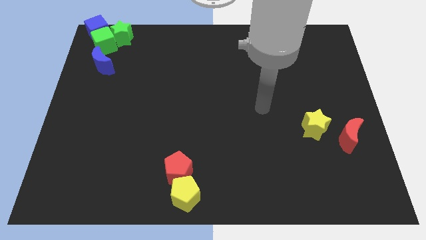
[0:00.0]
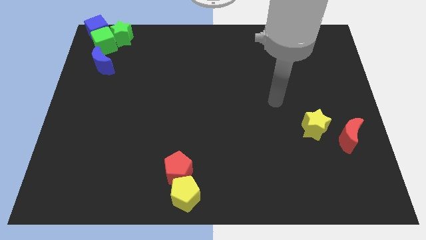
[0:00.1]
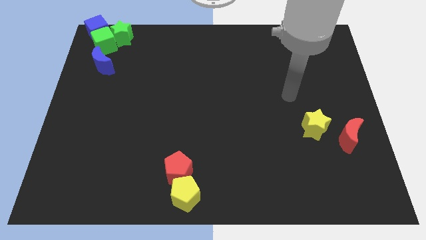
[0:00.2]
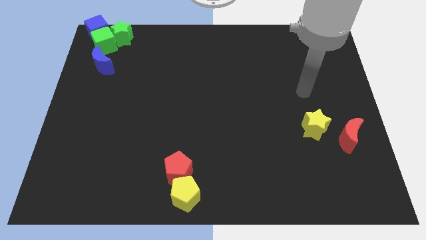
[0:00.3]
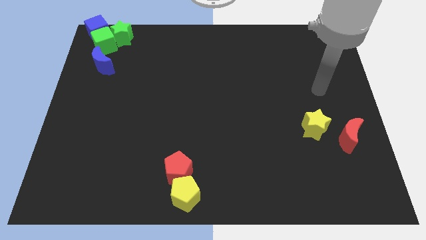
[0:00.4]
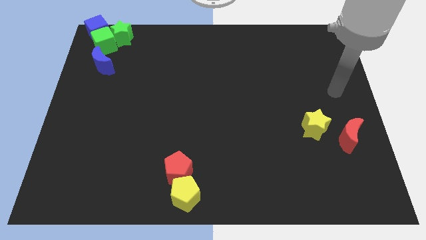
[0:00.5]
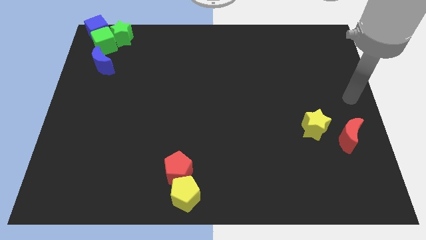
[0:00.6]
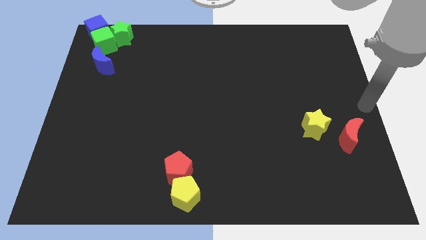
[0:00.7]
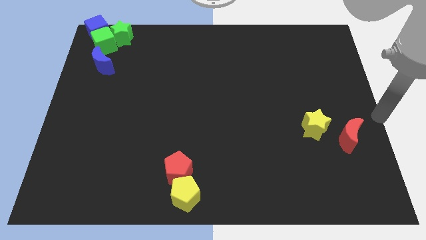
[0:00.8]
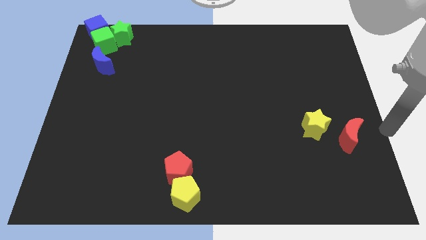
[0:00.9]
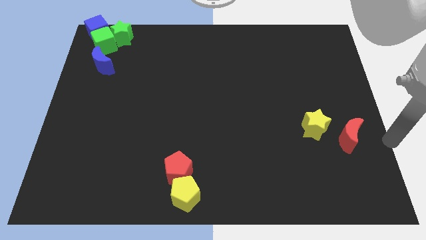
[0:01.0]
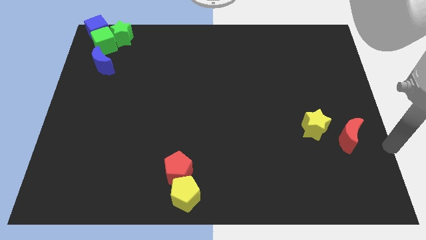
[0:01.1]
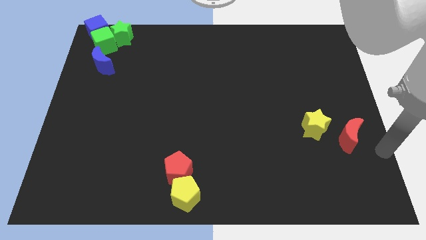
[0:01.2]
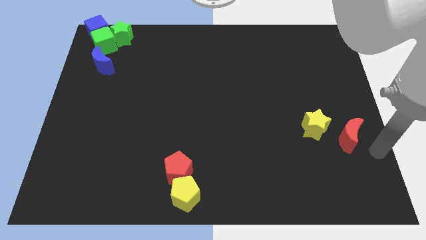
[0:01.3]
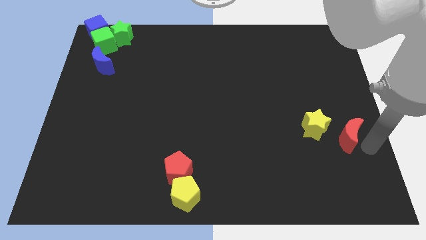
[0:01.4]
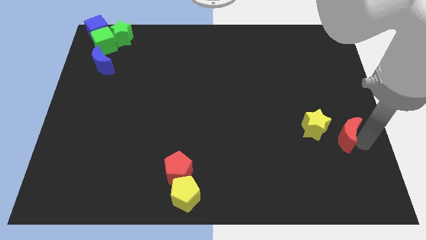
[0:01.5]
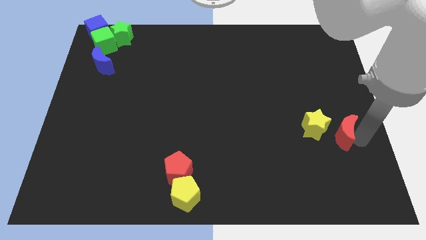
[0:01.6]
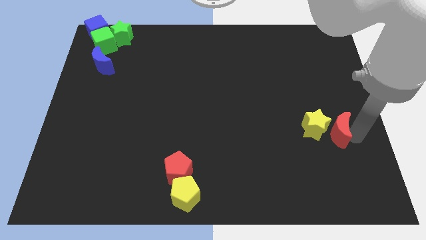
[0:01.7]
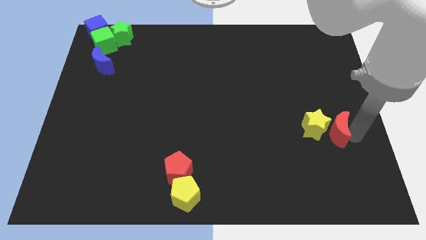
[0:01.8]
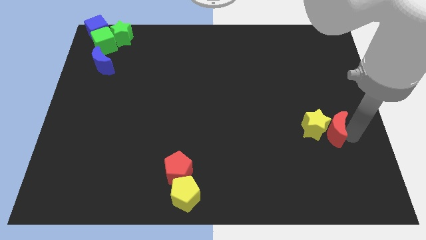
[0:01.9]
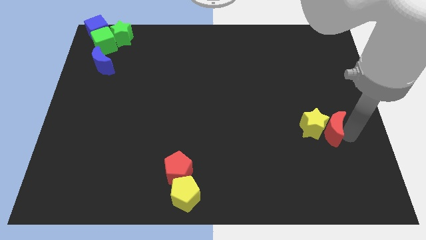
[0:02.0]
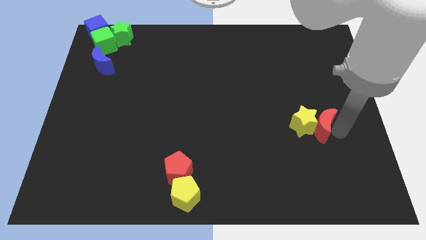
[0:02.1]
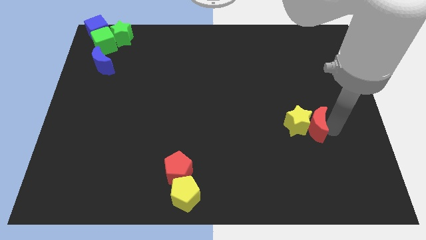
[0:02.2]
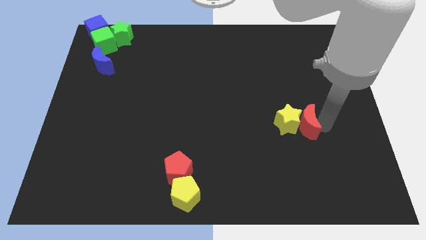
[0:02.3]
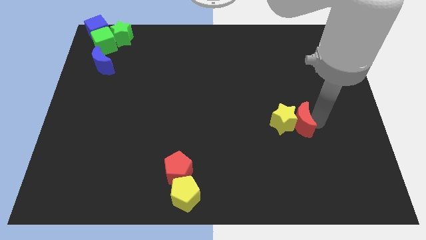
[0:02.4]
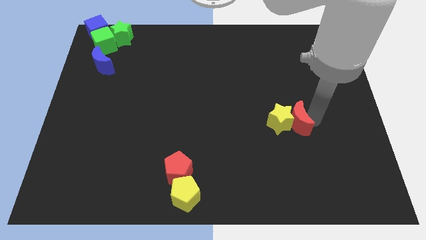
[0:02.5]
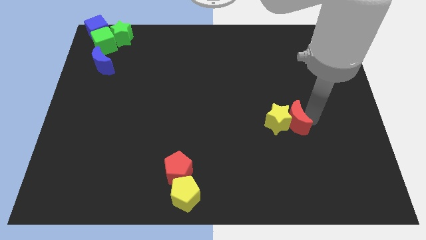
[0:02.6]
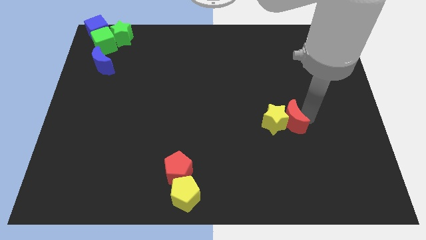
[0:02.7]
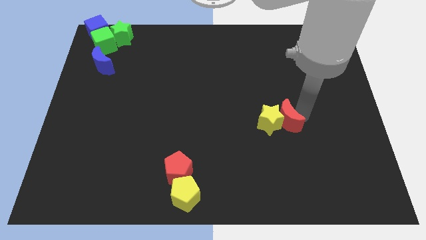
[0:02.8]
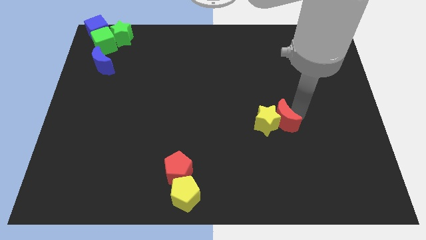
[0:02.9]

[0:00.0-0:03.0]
push yellow star with red moon towards left

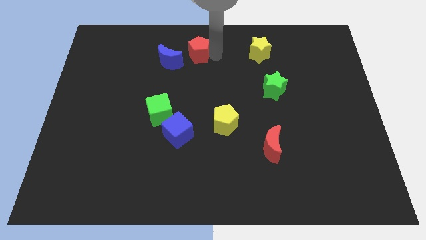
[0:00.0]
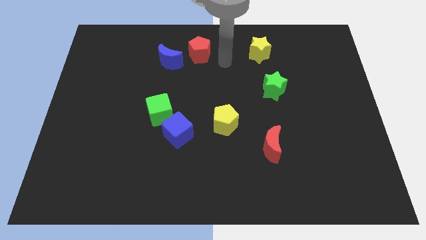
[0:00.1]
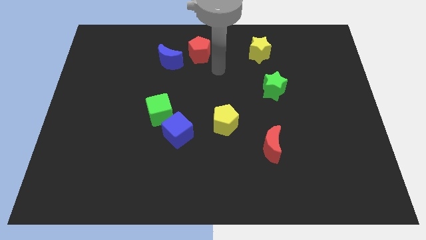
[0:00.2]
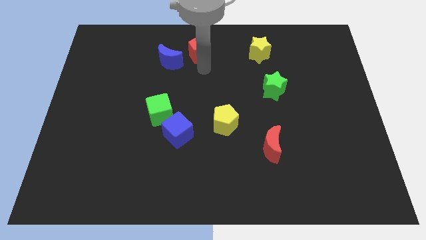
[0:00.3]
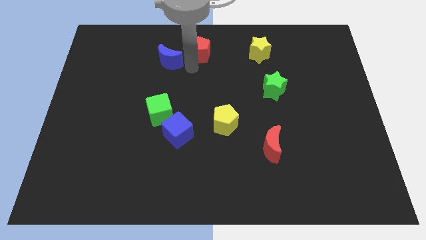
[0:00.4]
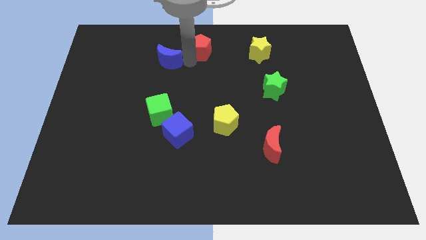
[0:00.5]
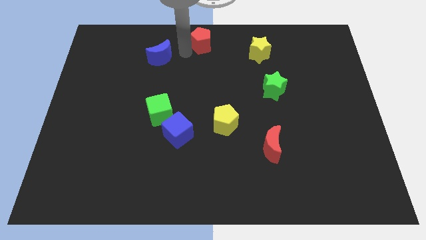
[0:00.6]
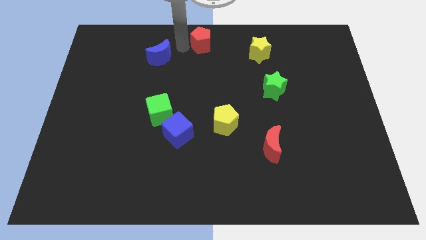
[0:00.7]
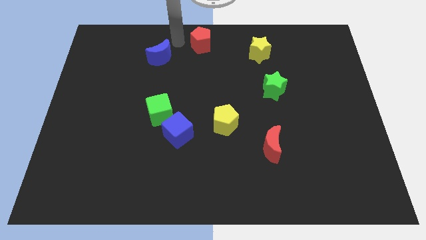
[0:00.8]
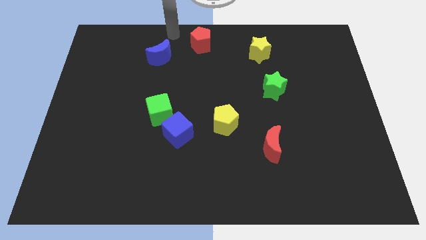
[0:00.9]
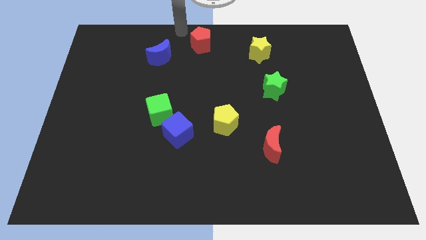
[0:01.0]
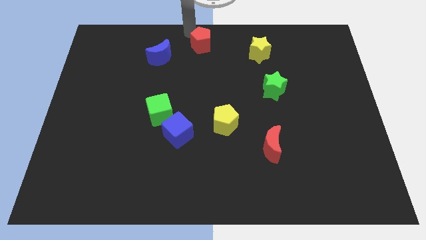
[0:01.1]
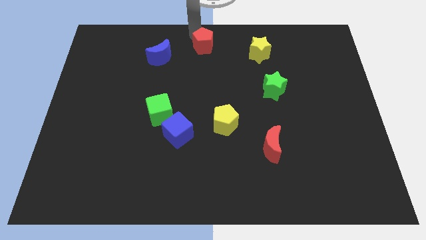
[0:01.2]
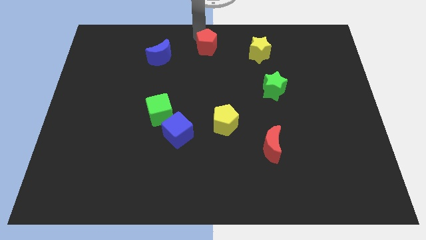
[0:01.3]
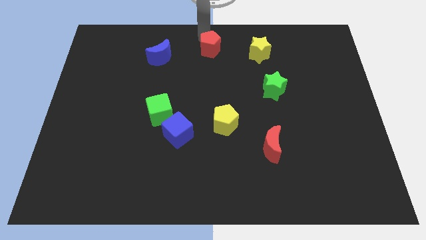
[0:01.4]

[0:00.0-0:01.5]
push the red pentagon towards the center top side of the board

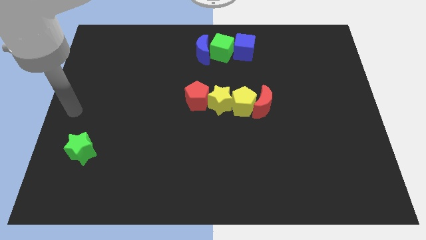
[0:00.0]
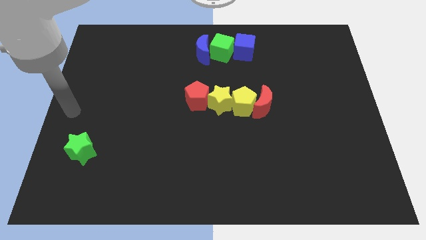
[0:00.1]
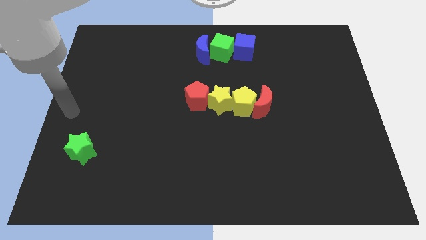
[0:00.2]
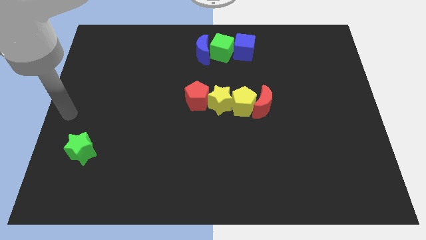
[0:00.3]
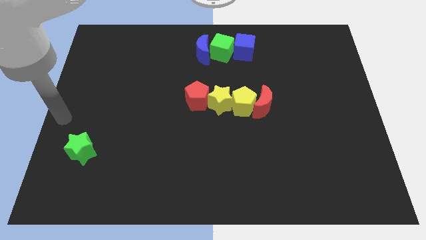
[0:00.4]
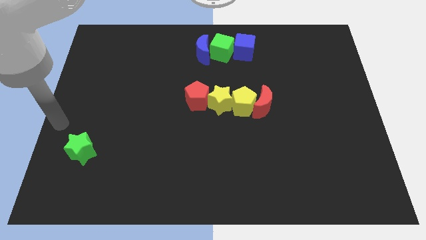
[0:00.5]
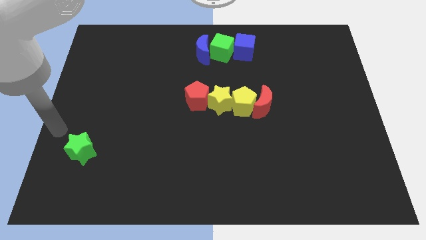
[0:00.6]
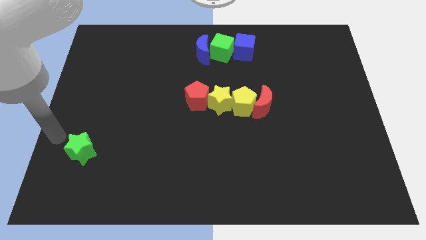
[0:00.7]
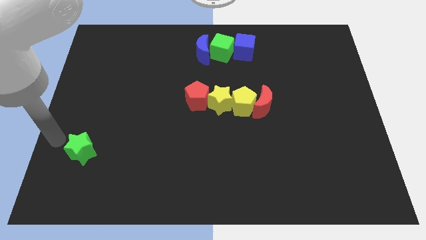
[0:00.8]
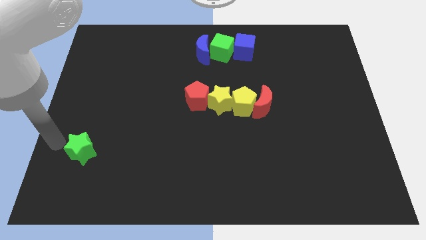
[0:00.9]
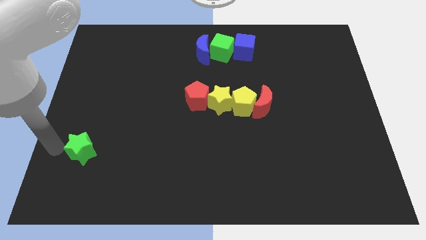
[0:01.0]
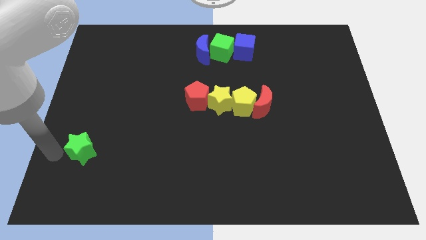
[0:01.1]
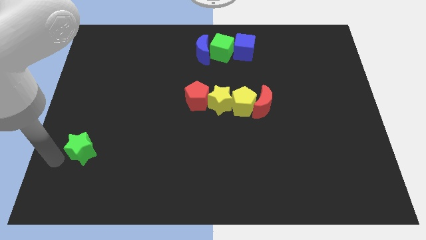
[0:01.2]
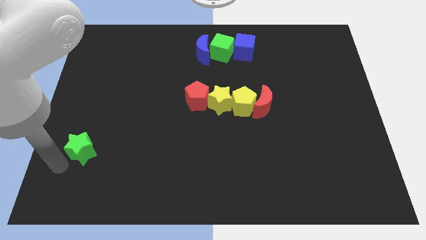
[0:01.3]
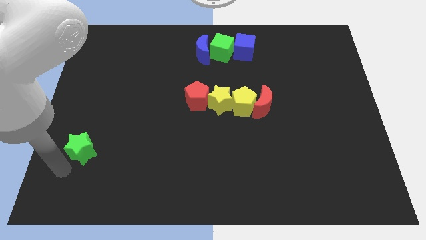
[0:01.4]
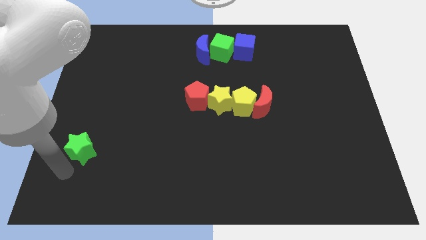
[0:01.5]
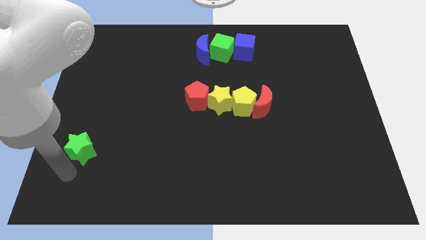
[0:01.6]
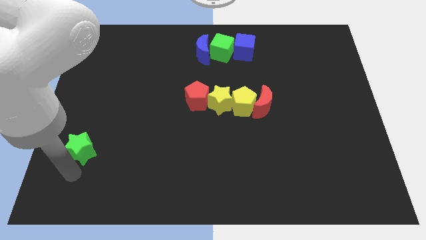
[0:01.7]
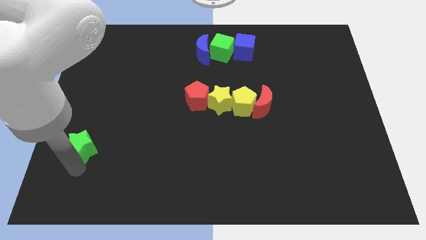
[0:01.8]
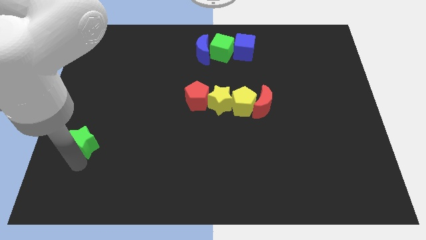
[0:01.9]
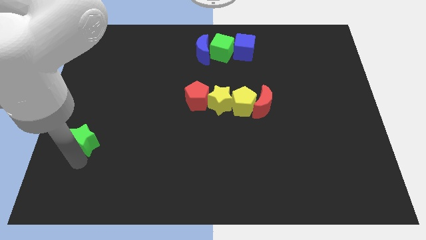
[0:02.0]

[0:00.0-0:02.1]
move the arm into the green star

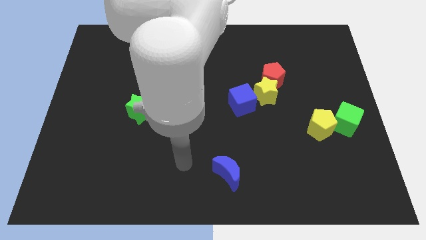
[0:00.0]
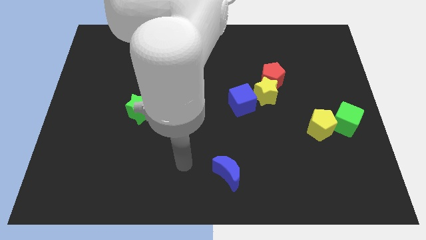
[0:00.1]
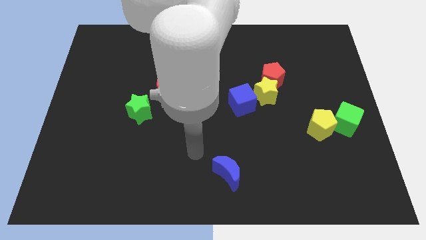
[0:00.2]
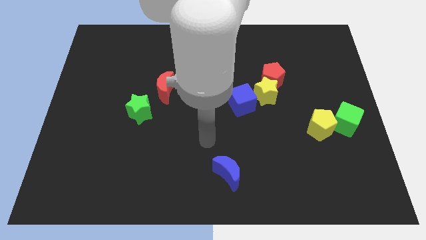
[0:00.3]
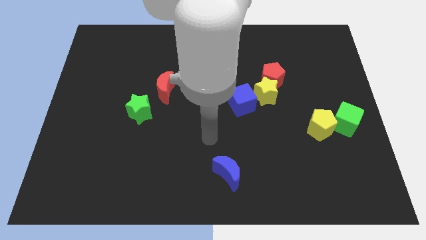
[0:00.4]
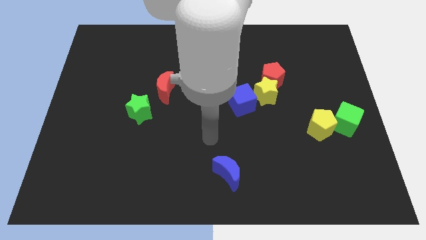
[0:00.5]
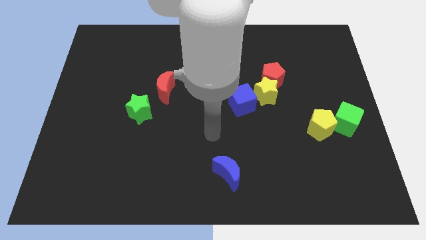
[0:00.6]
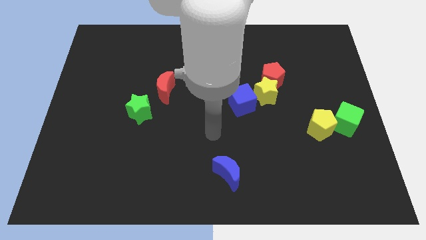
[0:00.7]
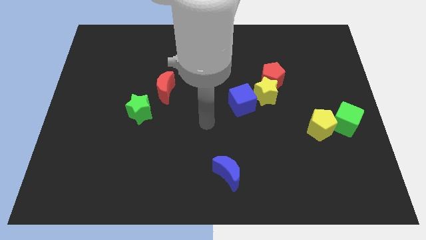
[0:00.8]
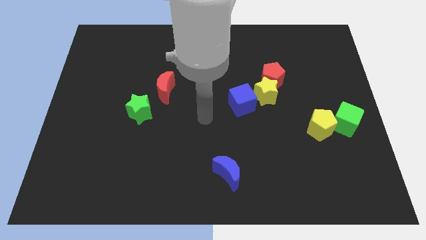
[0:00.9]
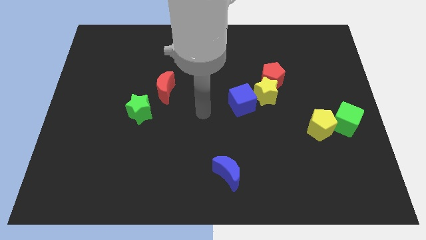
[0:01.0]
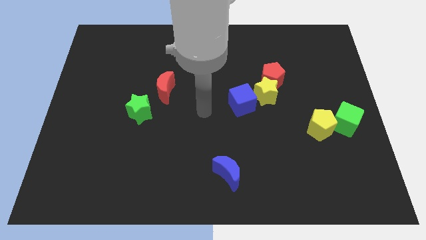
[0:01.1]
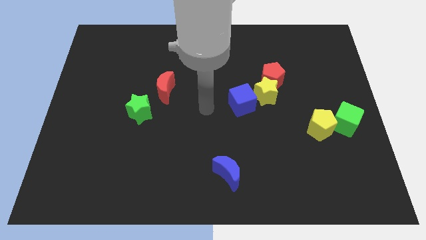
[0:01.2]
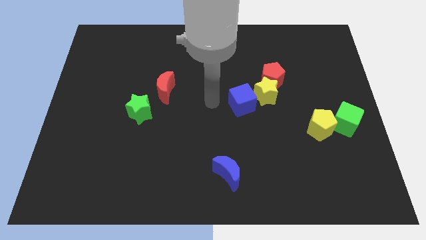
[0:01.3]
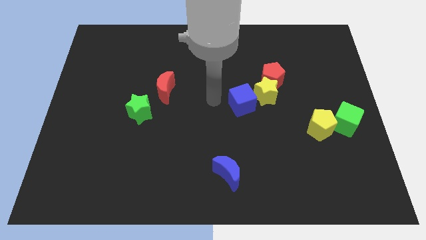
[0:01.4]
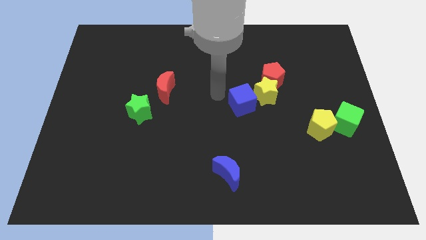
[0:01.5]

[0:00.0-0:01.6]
point your hand to the left of the blue cube

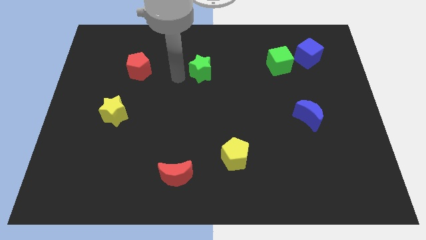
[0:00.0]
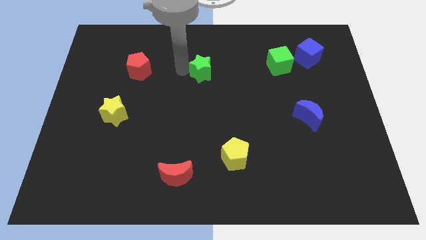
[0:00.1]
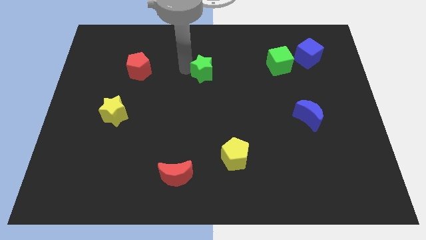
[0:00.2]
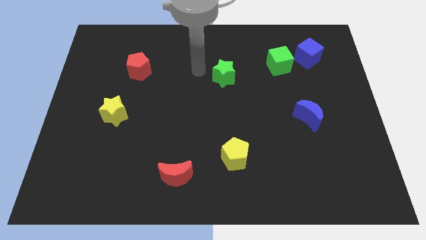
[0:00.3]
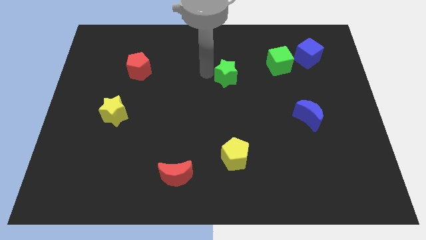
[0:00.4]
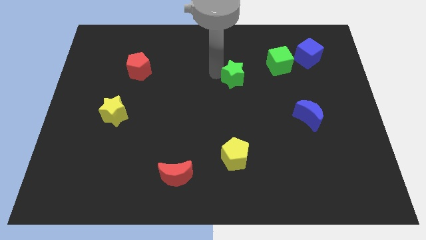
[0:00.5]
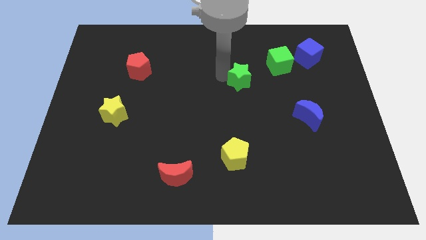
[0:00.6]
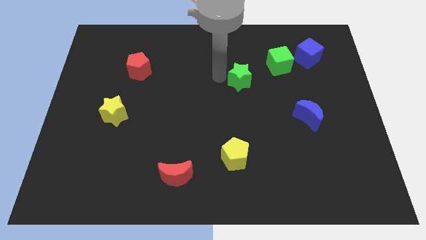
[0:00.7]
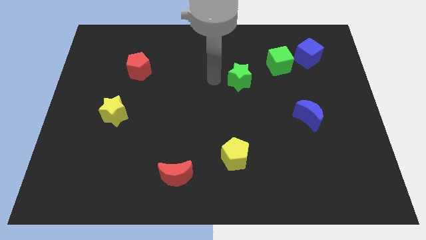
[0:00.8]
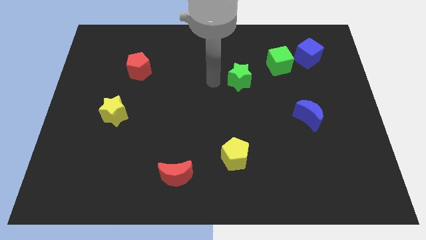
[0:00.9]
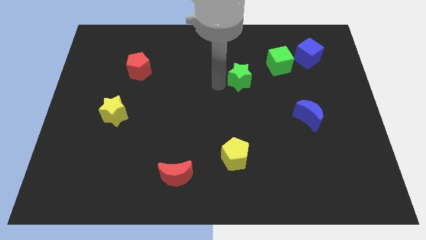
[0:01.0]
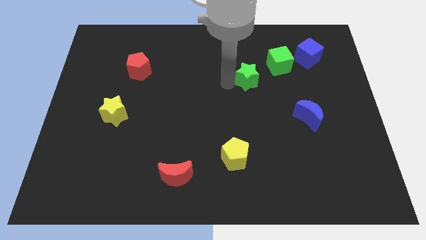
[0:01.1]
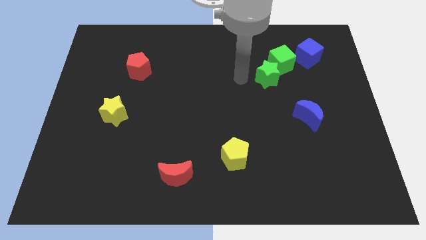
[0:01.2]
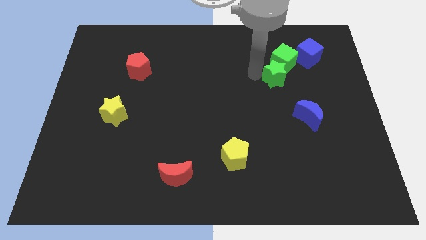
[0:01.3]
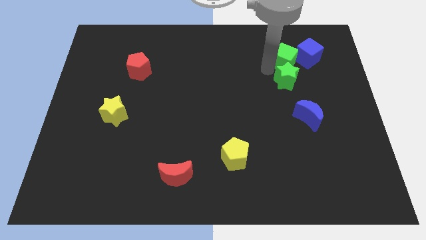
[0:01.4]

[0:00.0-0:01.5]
move the green star left below the green cube
